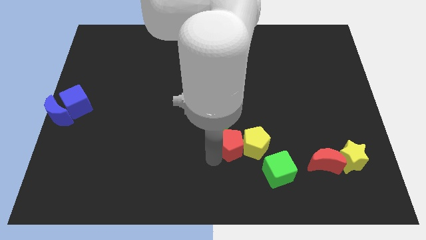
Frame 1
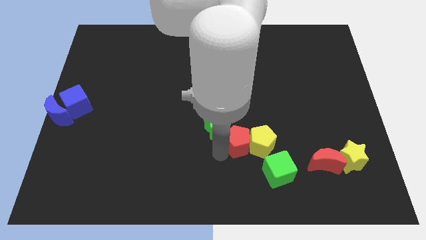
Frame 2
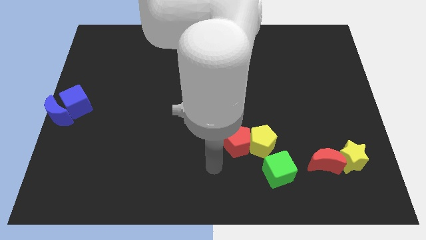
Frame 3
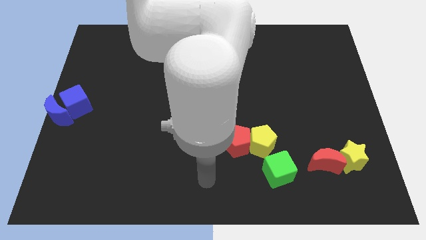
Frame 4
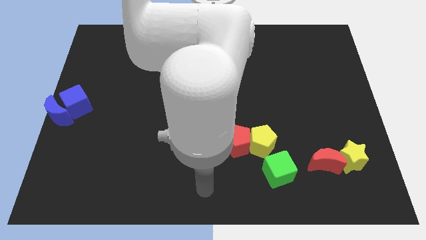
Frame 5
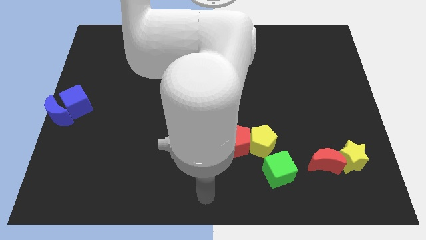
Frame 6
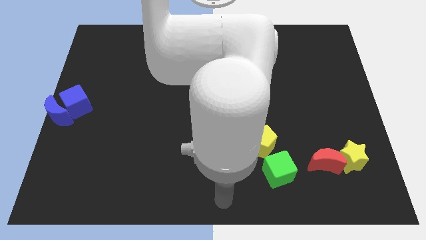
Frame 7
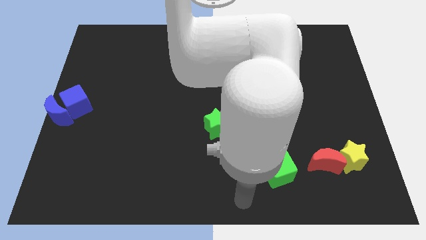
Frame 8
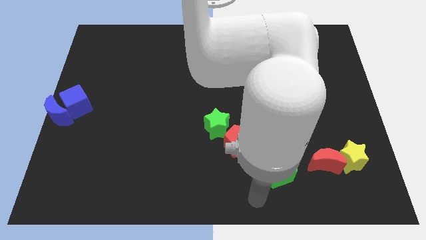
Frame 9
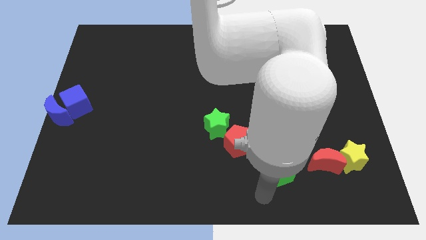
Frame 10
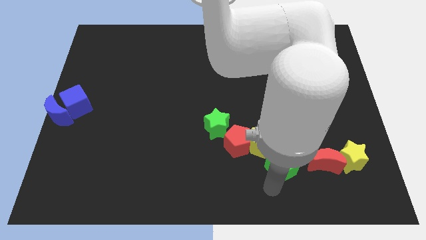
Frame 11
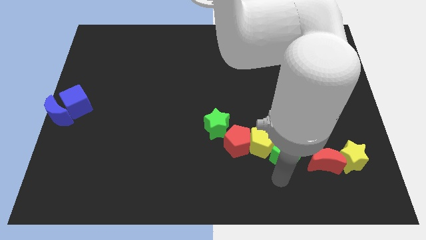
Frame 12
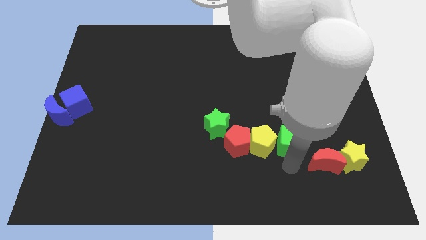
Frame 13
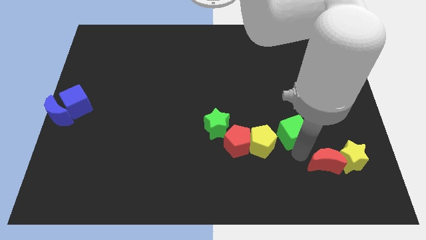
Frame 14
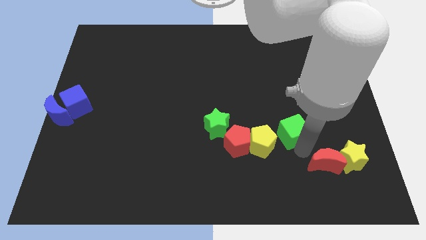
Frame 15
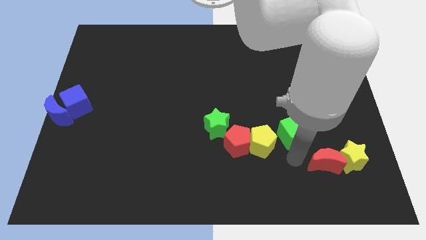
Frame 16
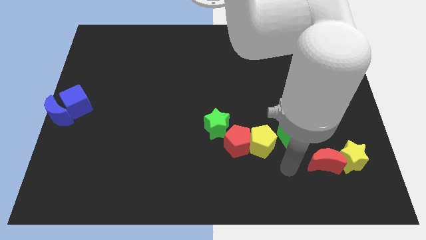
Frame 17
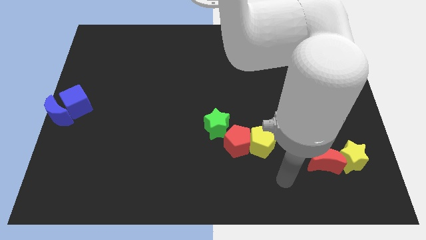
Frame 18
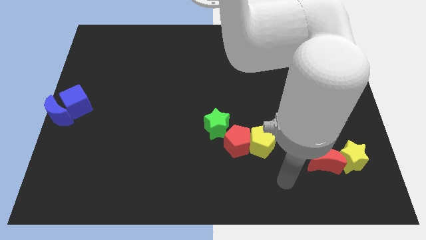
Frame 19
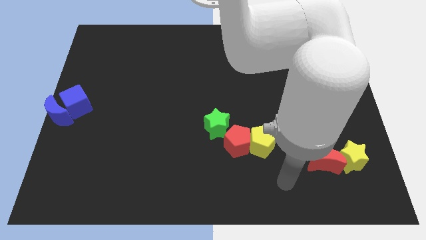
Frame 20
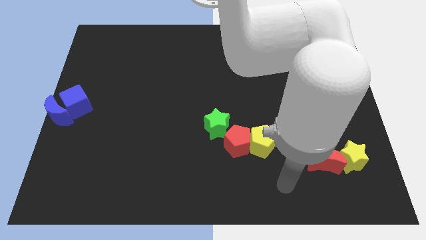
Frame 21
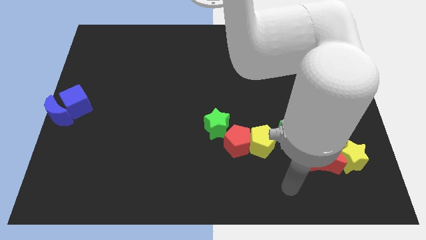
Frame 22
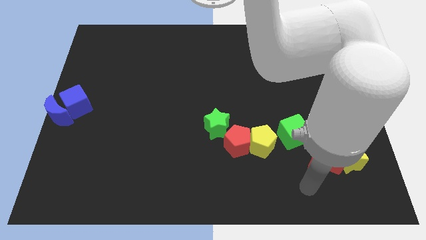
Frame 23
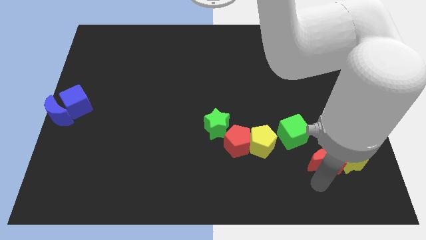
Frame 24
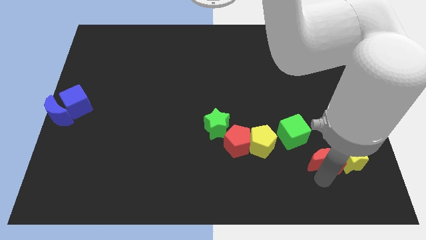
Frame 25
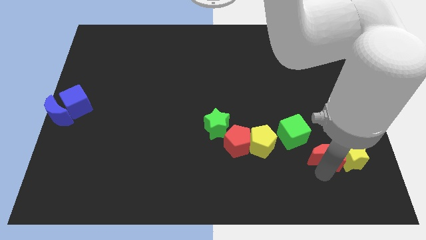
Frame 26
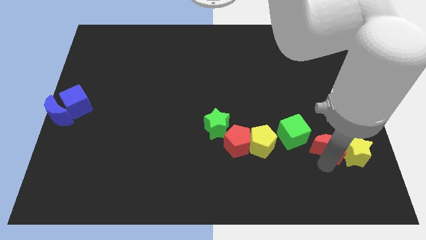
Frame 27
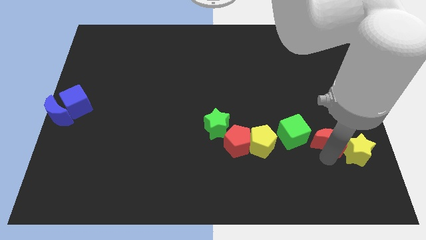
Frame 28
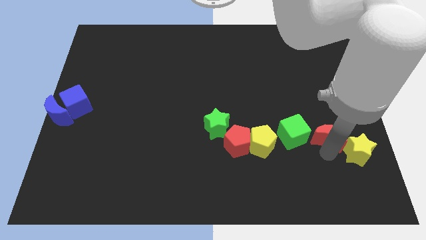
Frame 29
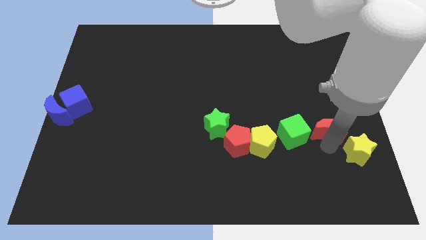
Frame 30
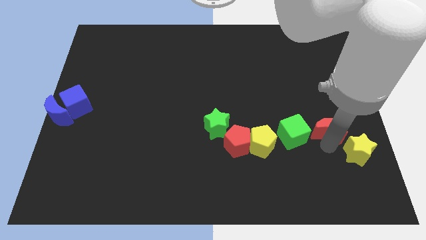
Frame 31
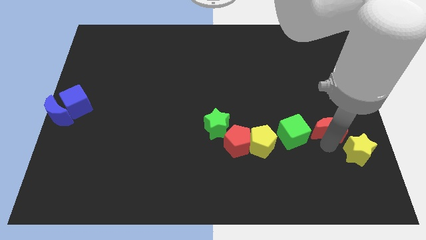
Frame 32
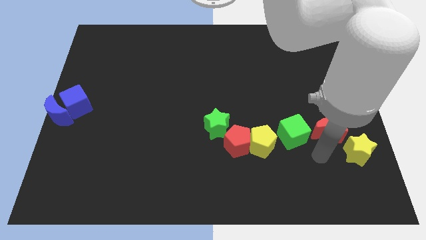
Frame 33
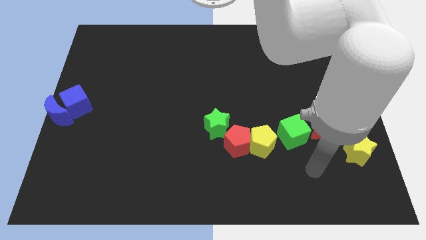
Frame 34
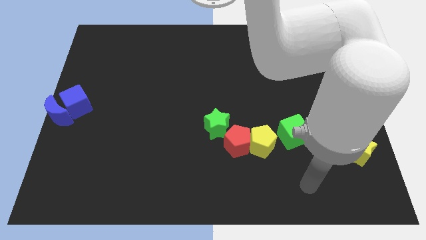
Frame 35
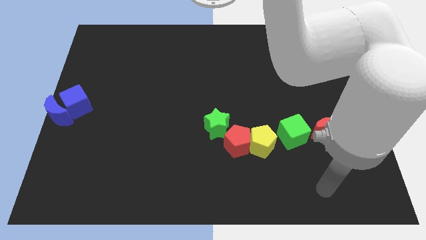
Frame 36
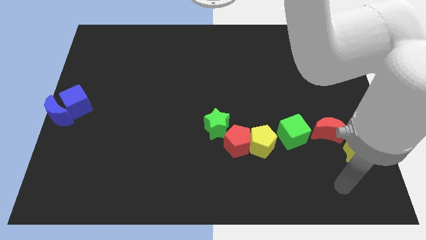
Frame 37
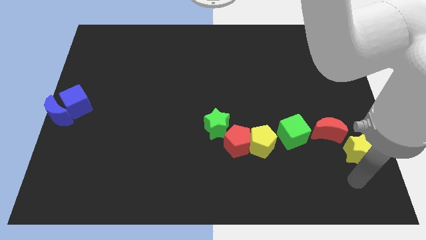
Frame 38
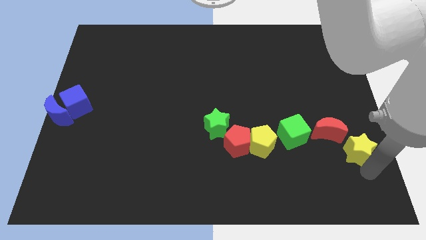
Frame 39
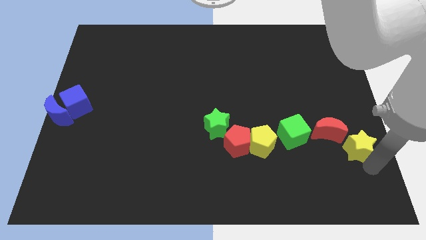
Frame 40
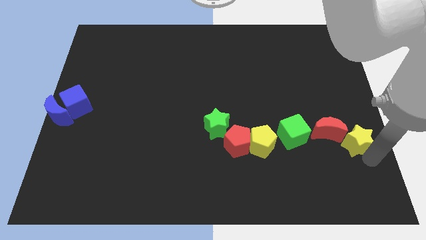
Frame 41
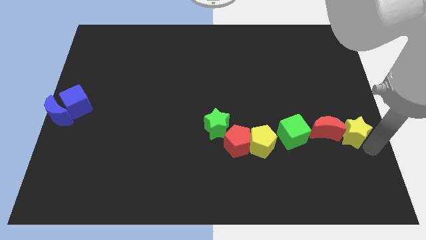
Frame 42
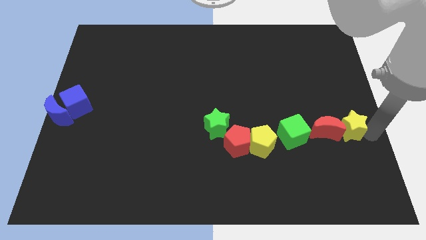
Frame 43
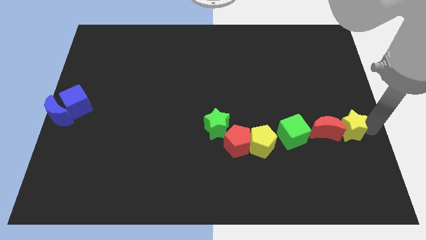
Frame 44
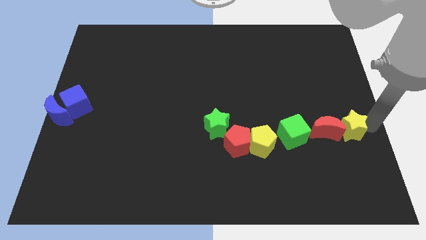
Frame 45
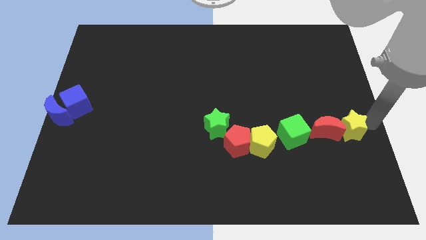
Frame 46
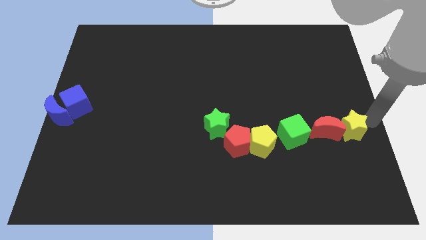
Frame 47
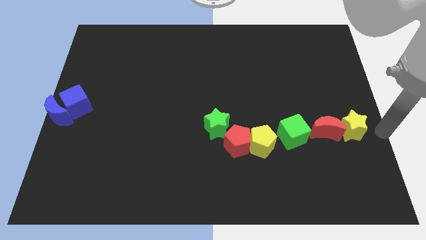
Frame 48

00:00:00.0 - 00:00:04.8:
arrange the group of red yellow and green blocks in a horizontal line

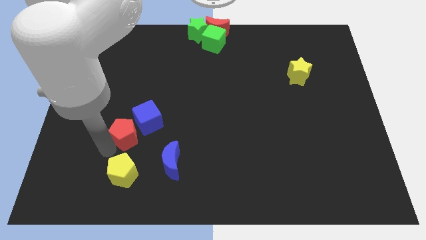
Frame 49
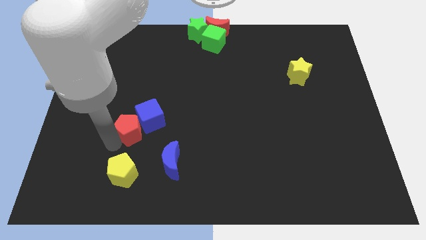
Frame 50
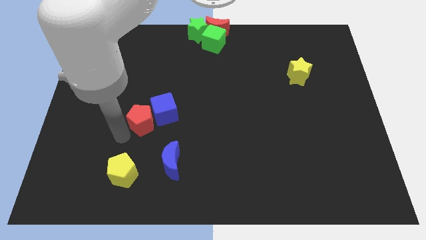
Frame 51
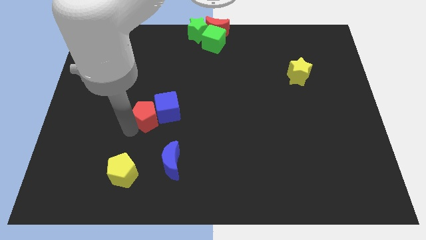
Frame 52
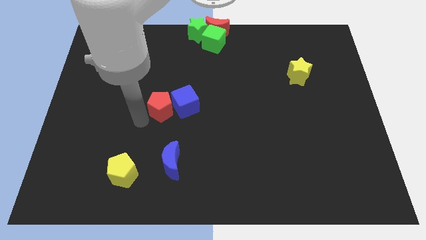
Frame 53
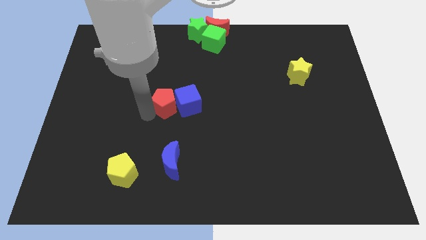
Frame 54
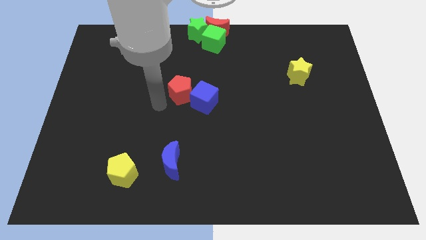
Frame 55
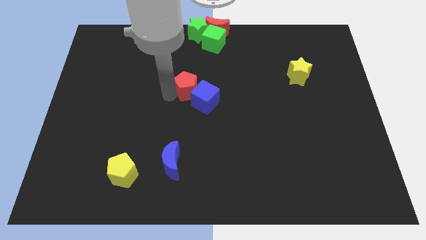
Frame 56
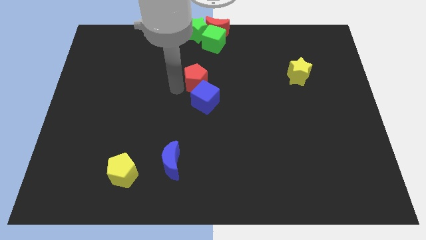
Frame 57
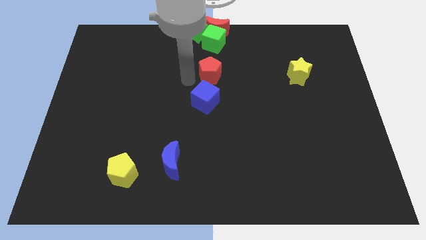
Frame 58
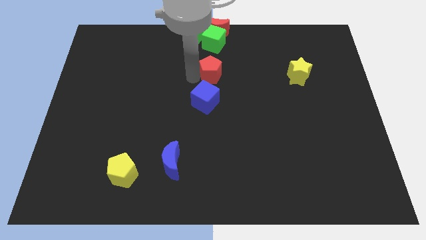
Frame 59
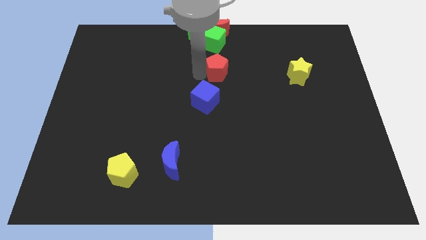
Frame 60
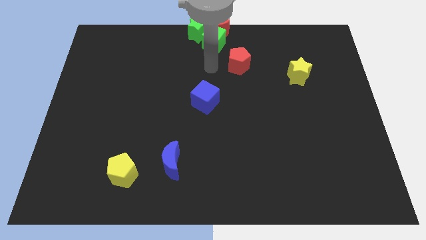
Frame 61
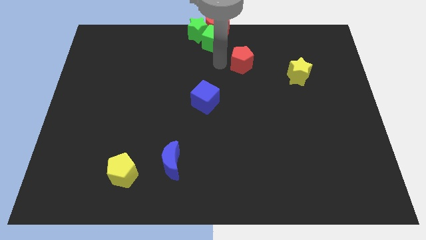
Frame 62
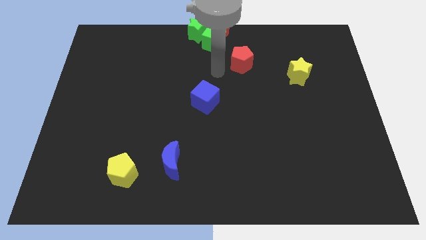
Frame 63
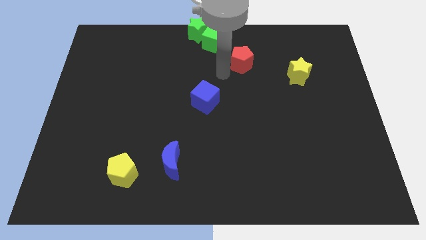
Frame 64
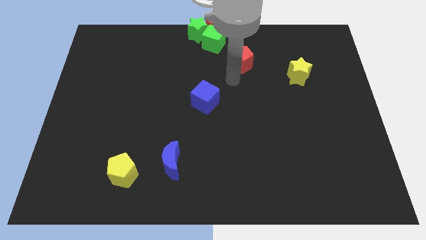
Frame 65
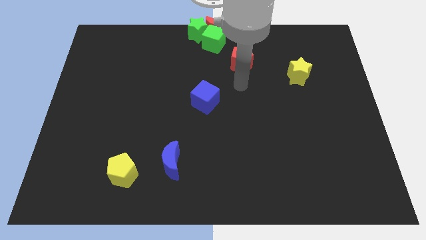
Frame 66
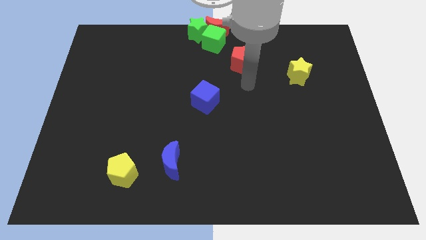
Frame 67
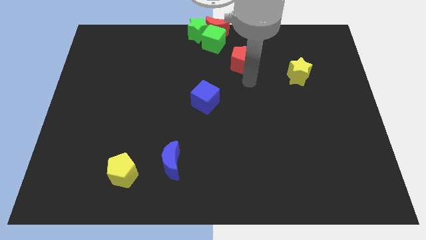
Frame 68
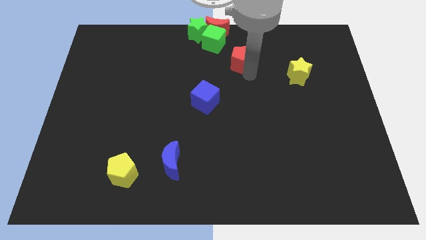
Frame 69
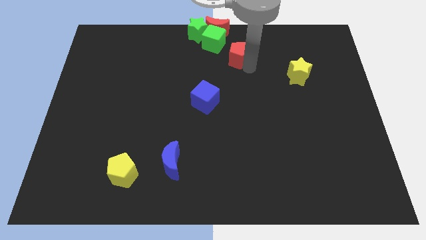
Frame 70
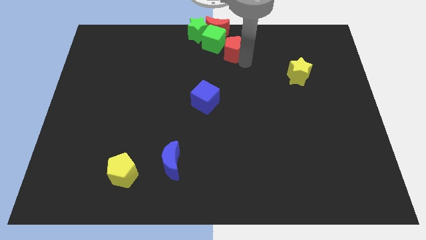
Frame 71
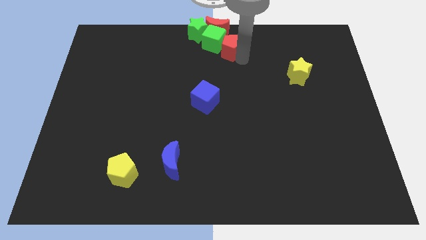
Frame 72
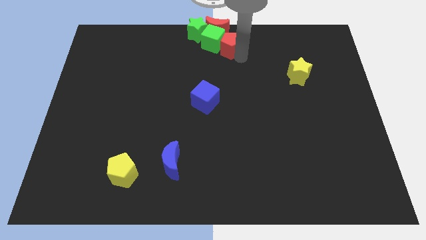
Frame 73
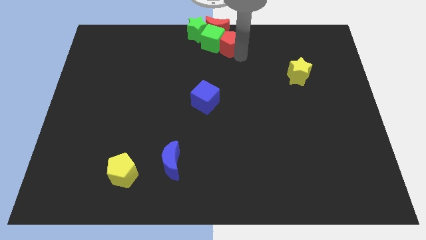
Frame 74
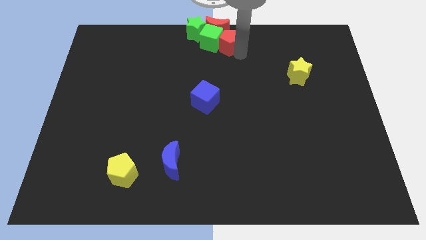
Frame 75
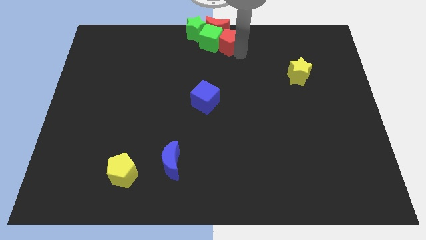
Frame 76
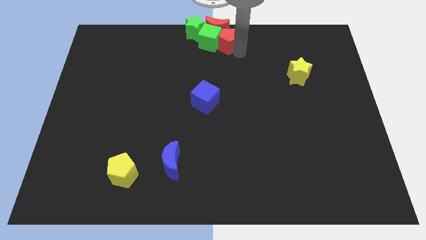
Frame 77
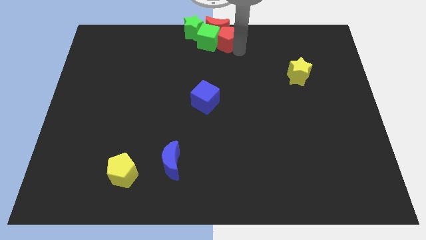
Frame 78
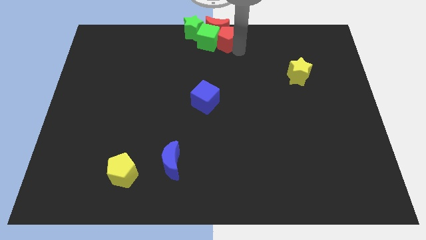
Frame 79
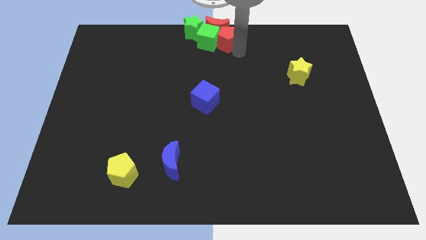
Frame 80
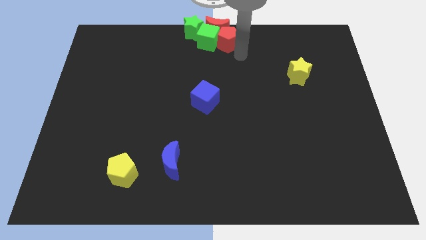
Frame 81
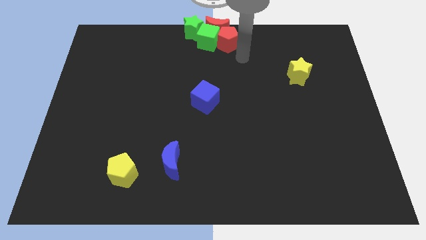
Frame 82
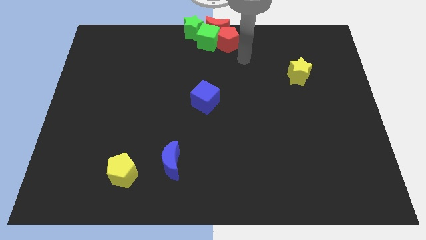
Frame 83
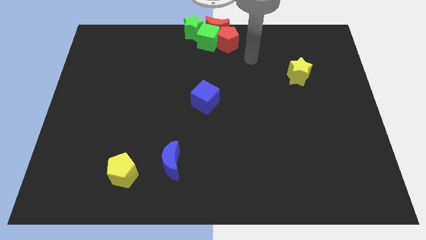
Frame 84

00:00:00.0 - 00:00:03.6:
move red pentagon into the green cube

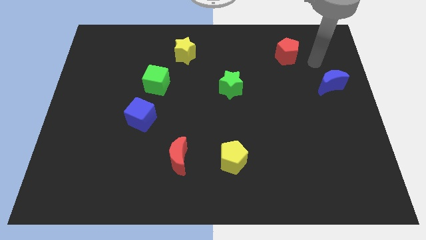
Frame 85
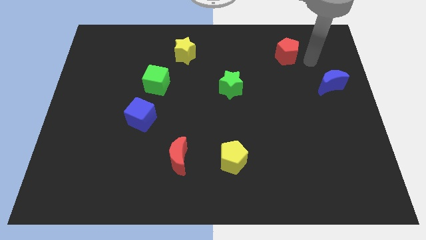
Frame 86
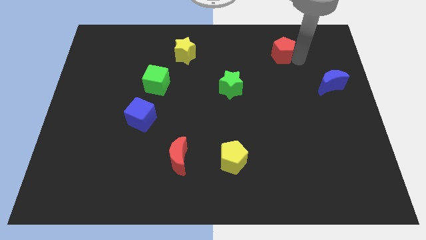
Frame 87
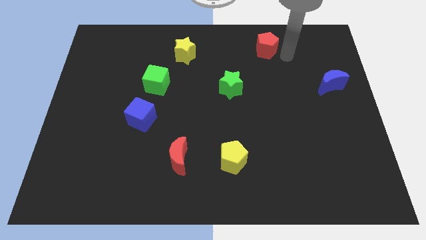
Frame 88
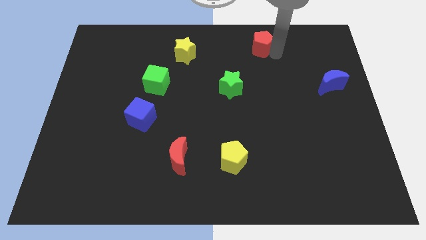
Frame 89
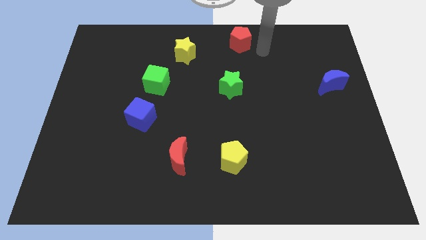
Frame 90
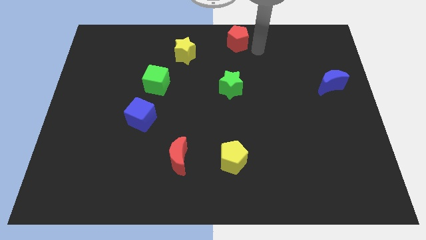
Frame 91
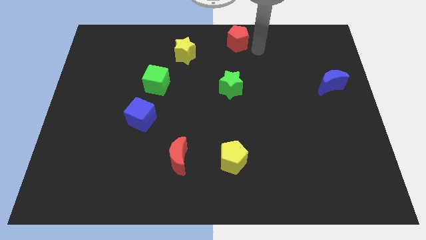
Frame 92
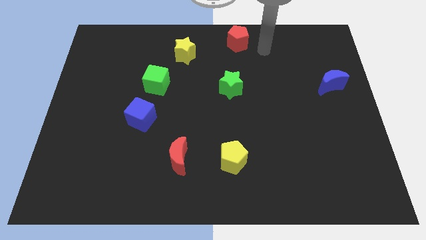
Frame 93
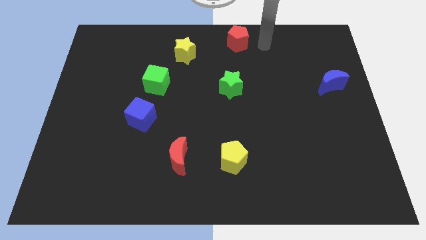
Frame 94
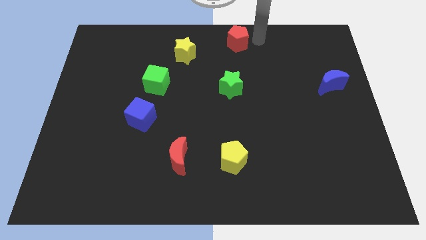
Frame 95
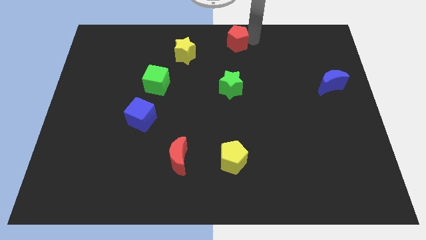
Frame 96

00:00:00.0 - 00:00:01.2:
place the red pentagon at top center of the board
